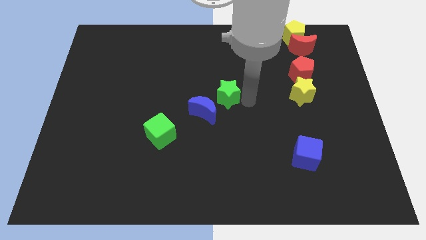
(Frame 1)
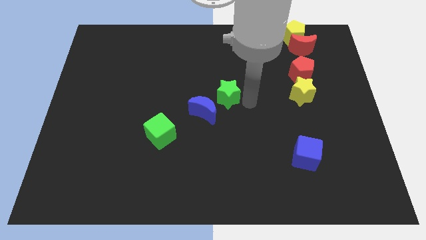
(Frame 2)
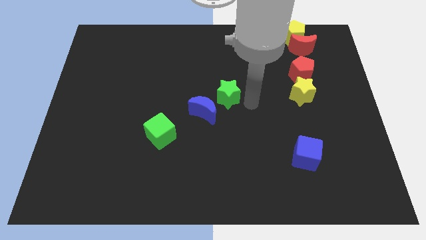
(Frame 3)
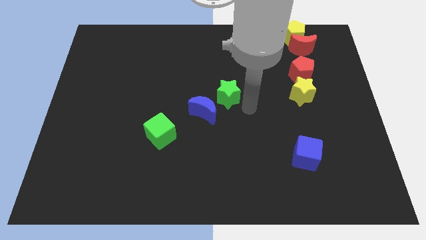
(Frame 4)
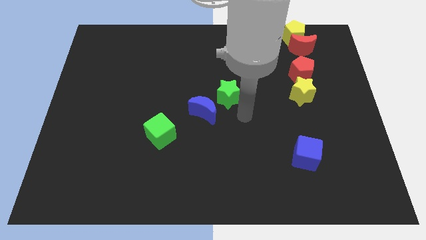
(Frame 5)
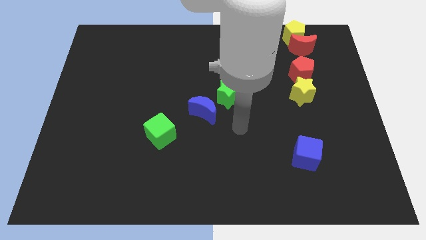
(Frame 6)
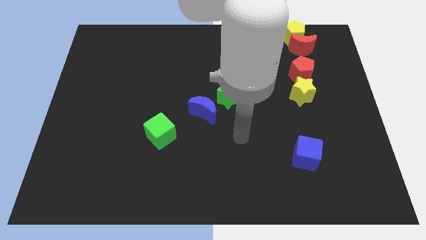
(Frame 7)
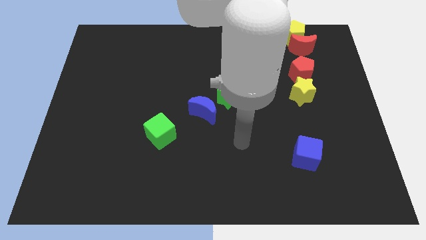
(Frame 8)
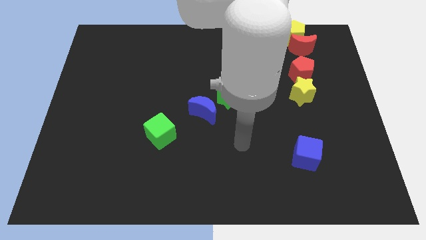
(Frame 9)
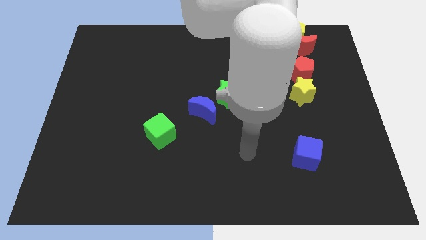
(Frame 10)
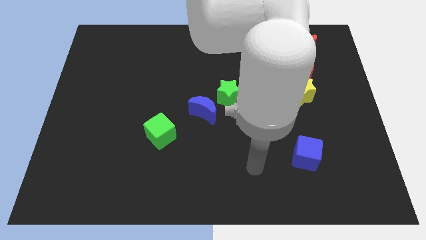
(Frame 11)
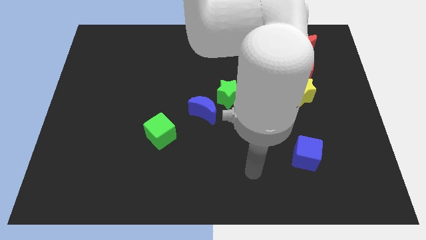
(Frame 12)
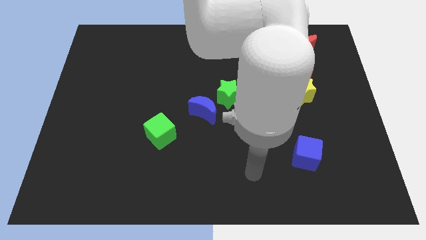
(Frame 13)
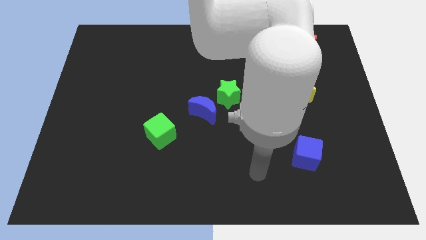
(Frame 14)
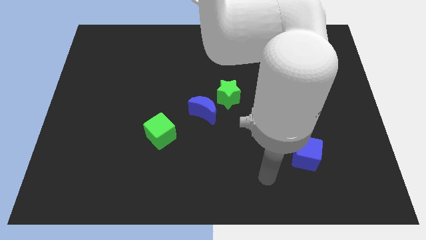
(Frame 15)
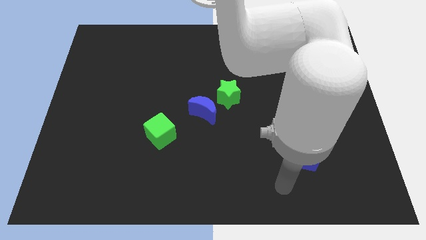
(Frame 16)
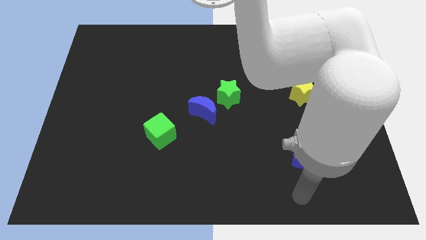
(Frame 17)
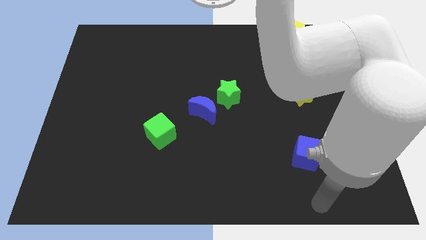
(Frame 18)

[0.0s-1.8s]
move the arm at the bottom of the blue cube

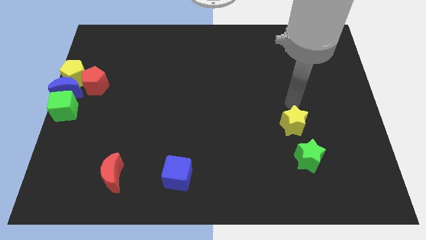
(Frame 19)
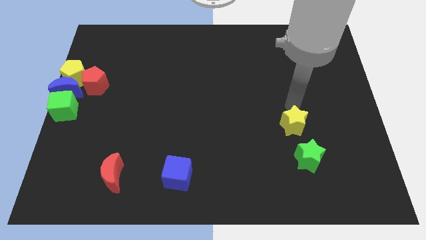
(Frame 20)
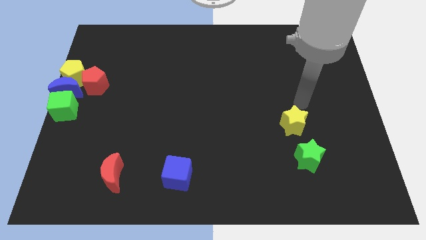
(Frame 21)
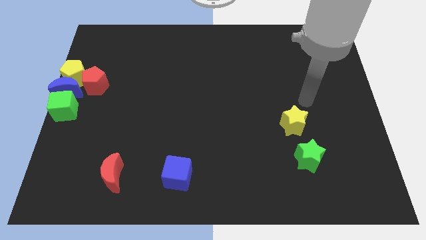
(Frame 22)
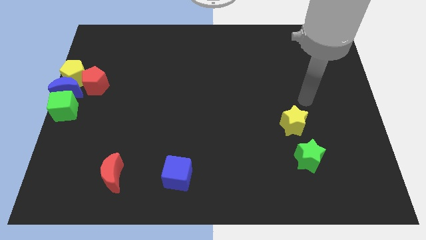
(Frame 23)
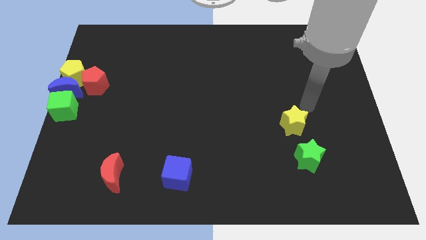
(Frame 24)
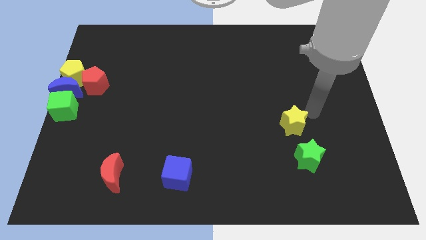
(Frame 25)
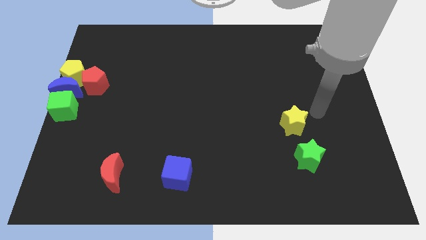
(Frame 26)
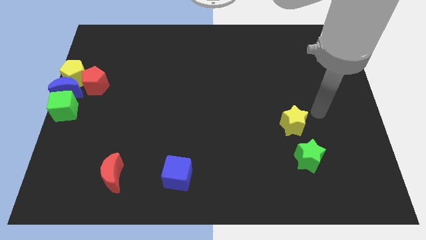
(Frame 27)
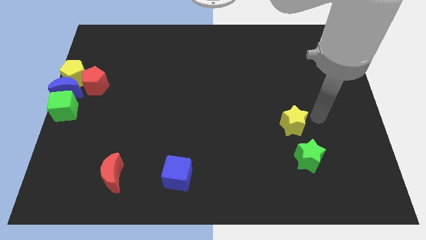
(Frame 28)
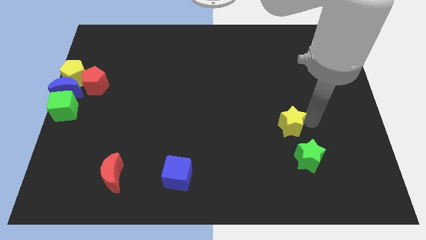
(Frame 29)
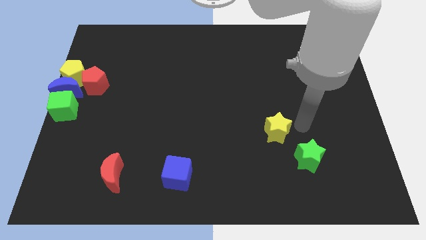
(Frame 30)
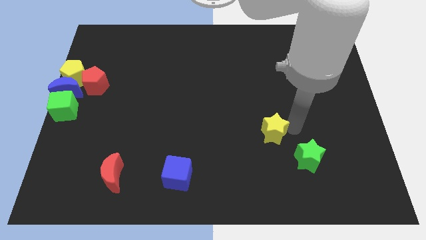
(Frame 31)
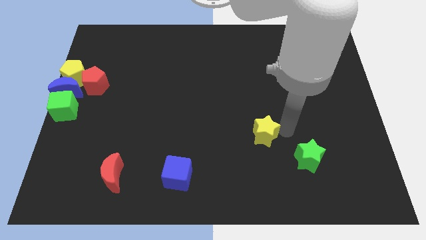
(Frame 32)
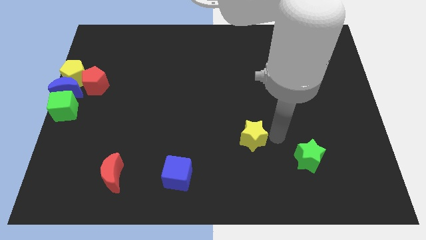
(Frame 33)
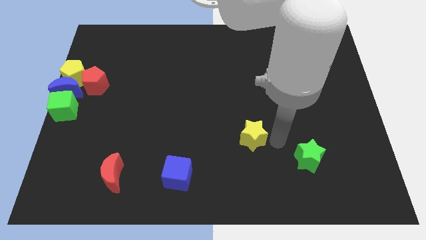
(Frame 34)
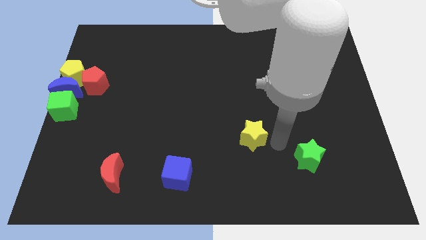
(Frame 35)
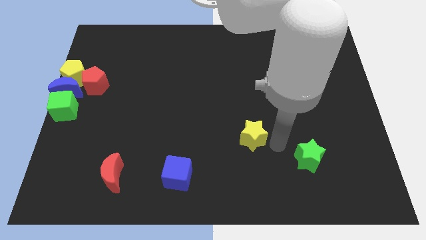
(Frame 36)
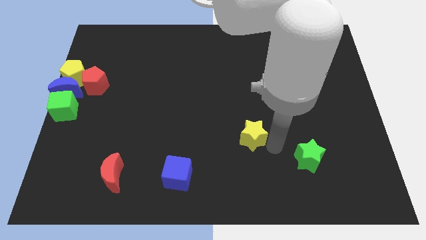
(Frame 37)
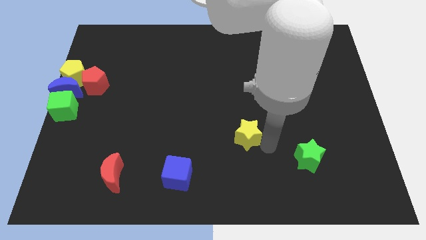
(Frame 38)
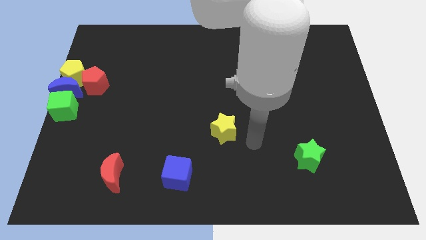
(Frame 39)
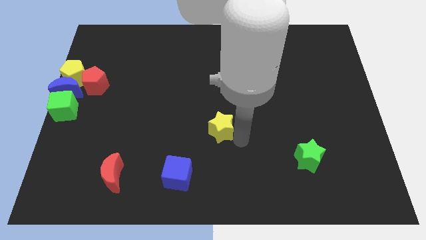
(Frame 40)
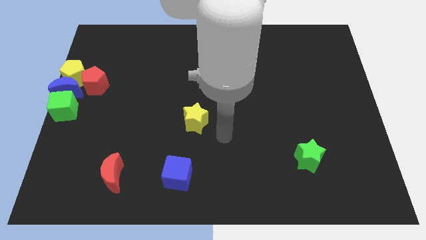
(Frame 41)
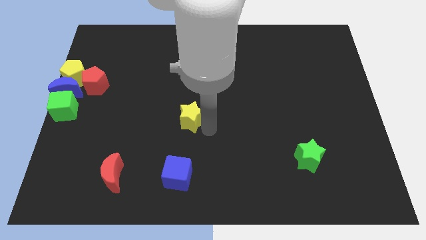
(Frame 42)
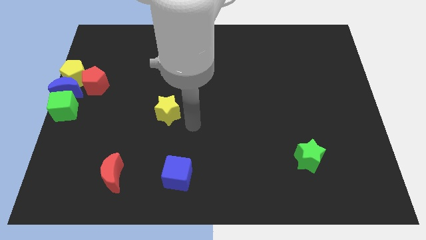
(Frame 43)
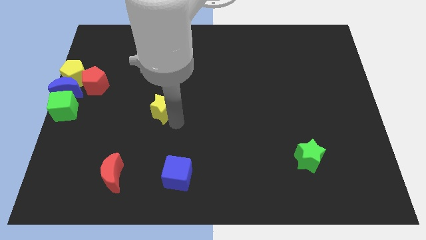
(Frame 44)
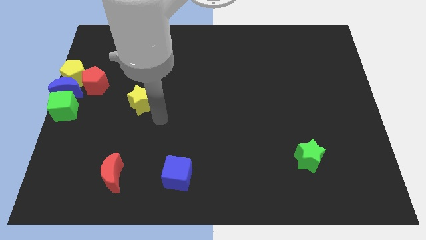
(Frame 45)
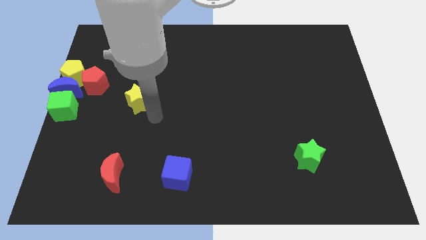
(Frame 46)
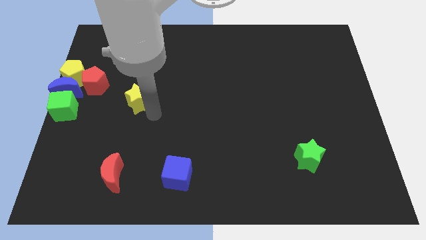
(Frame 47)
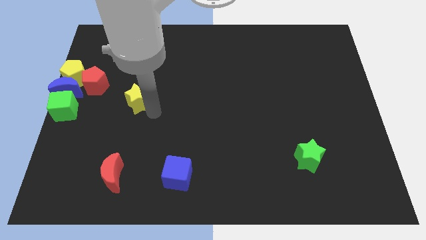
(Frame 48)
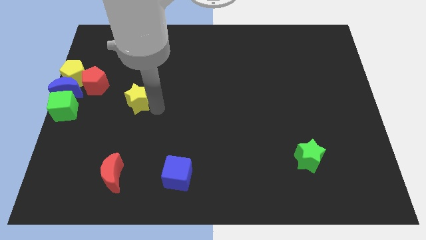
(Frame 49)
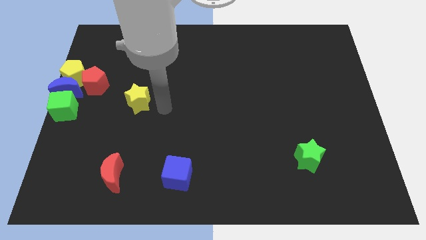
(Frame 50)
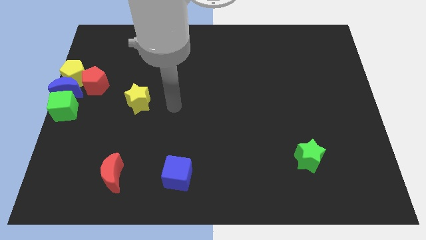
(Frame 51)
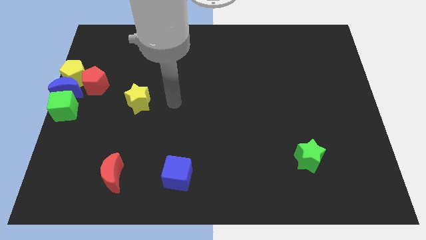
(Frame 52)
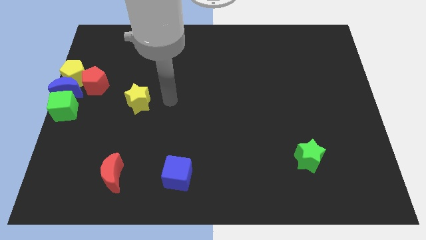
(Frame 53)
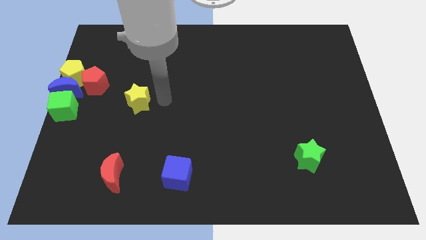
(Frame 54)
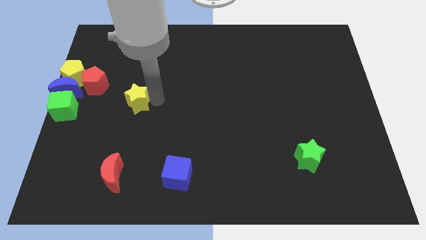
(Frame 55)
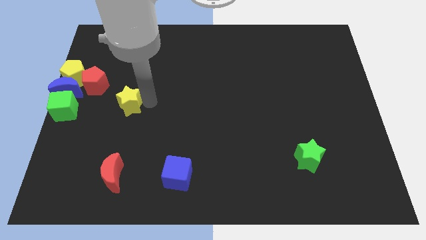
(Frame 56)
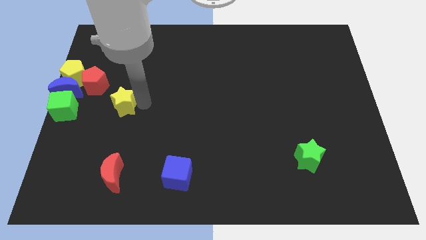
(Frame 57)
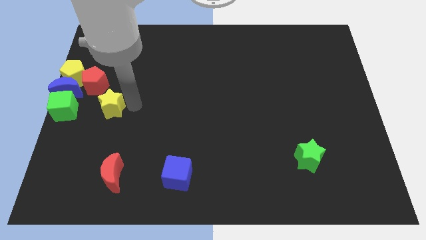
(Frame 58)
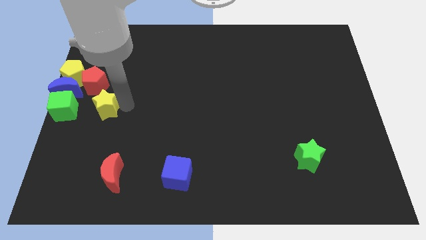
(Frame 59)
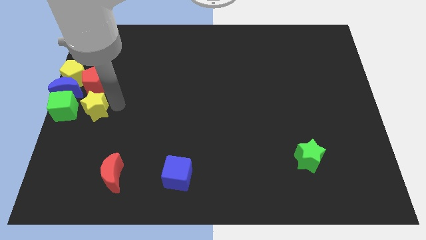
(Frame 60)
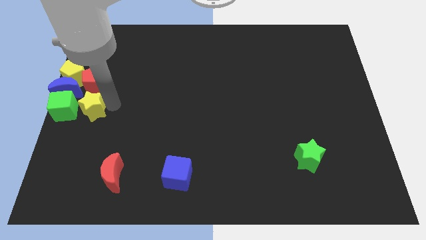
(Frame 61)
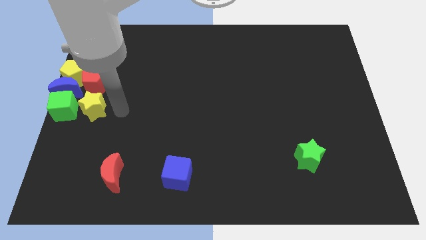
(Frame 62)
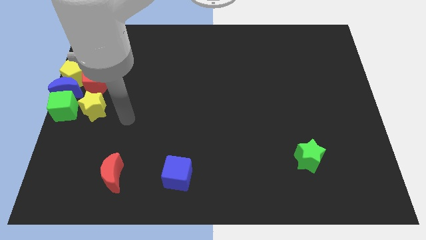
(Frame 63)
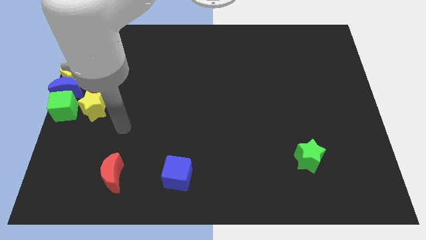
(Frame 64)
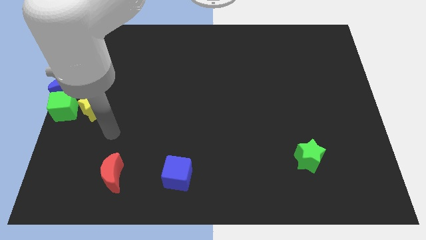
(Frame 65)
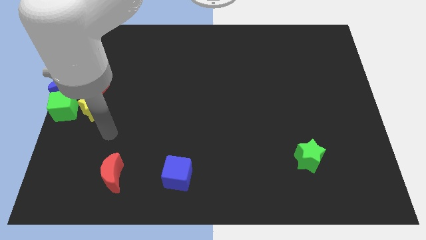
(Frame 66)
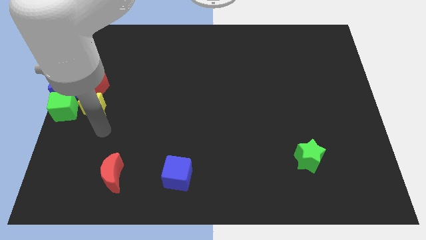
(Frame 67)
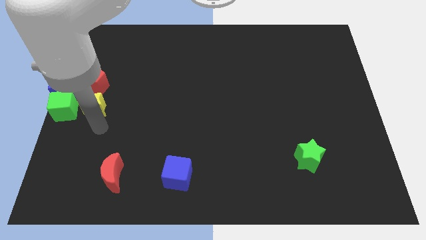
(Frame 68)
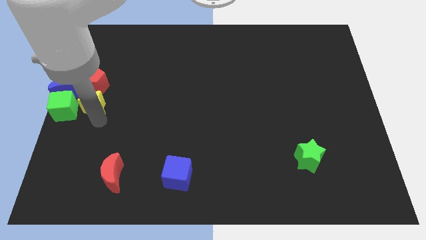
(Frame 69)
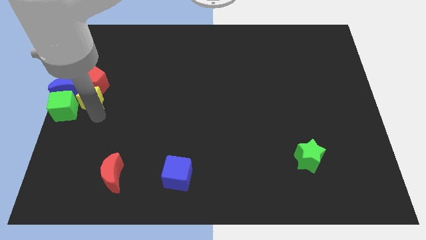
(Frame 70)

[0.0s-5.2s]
place the yellow star to the right side of the green cube

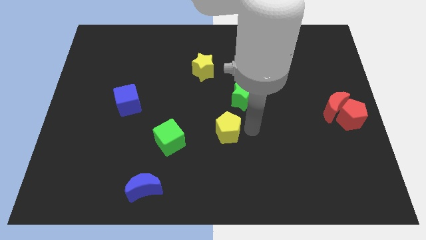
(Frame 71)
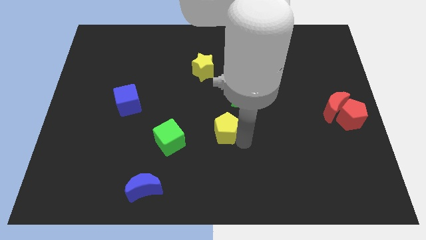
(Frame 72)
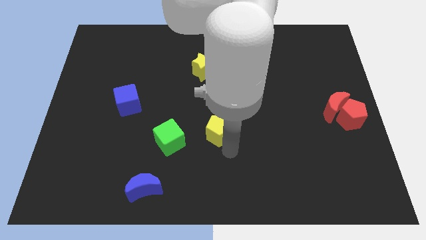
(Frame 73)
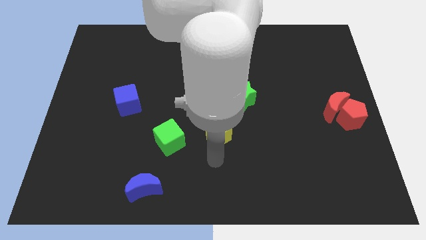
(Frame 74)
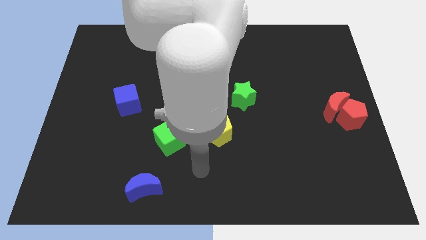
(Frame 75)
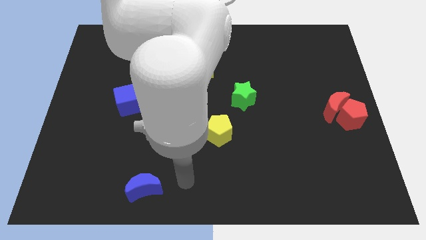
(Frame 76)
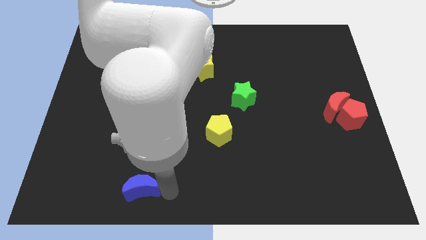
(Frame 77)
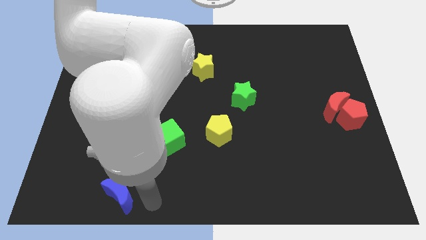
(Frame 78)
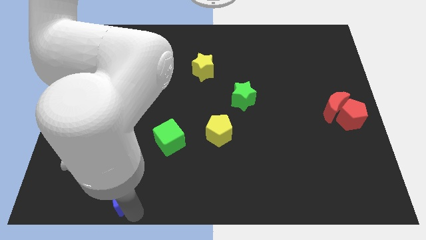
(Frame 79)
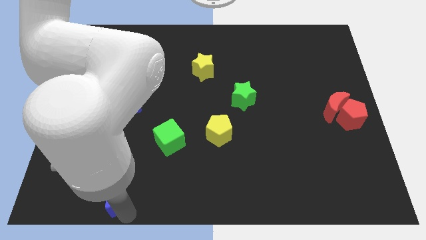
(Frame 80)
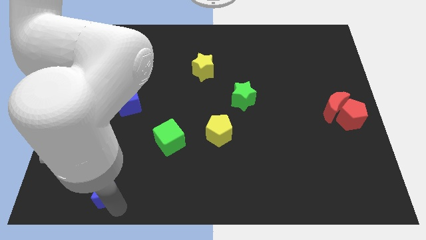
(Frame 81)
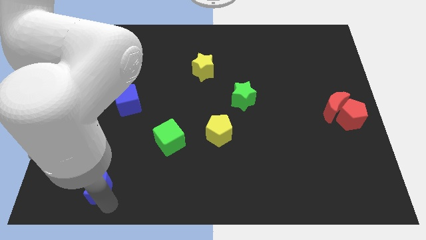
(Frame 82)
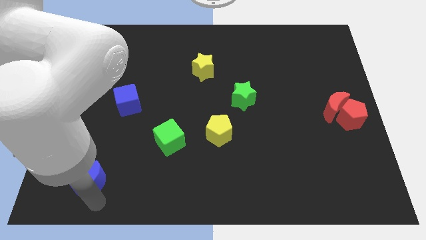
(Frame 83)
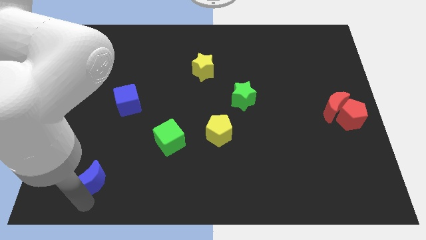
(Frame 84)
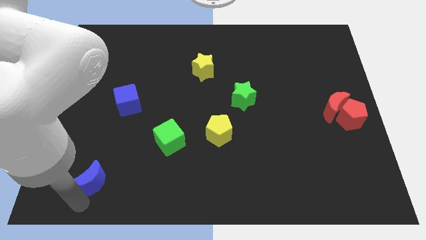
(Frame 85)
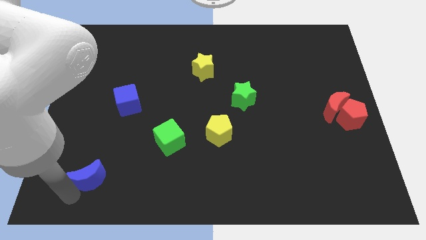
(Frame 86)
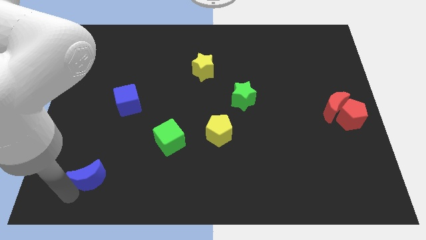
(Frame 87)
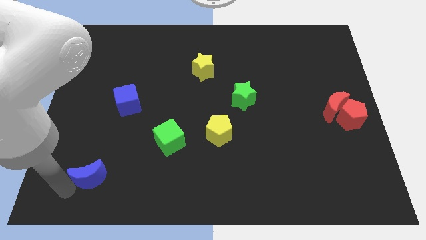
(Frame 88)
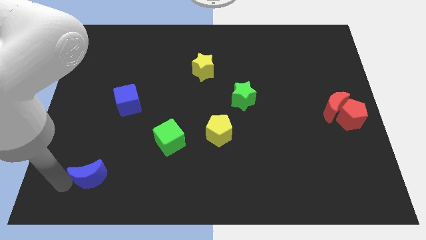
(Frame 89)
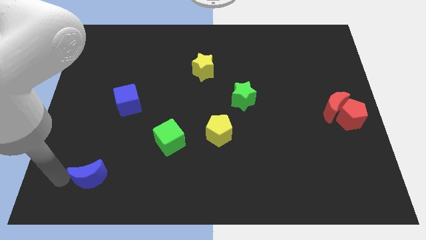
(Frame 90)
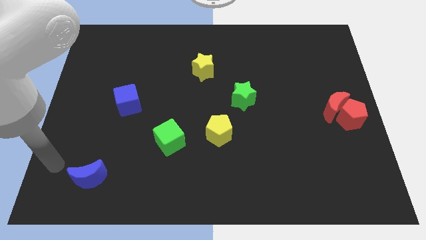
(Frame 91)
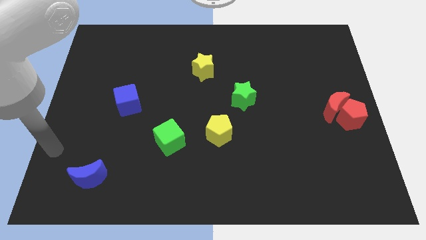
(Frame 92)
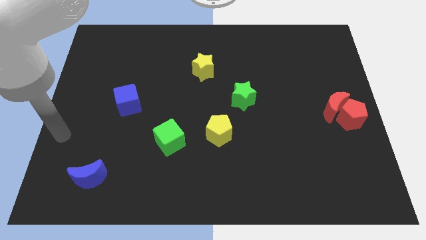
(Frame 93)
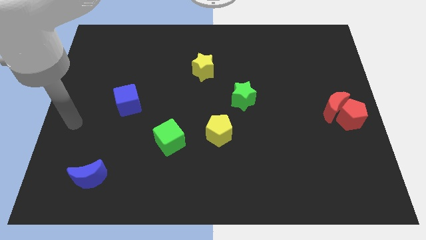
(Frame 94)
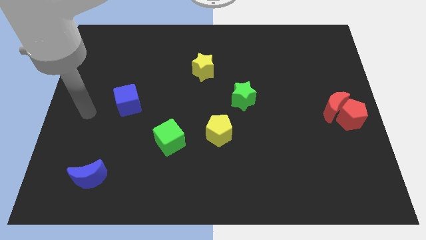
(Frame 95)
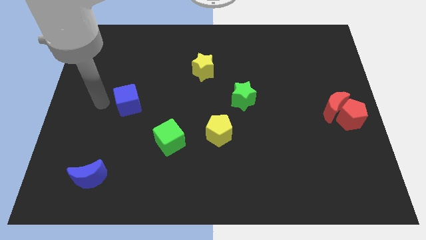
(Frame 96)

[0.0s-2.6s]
push the blue crescent slightly to the top
